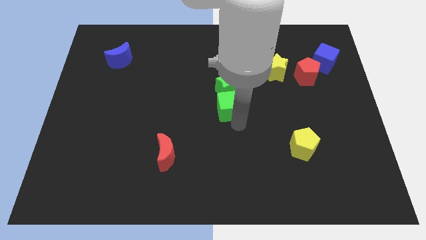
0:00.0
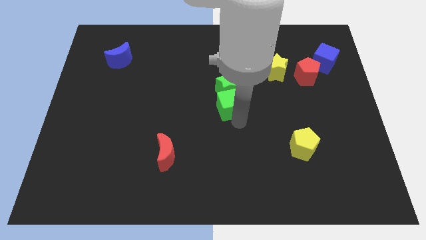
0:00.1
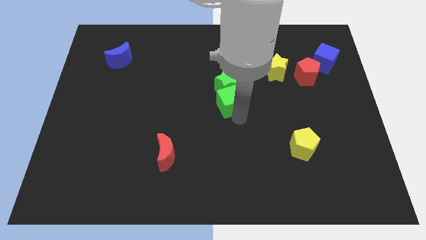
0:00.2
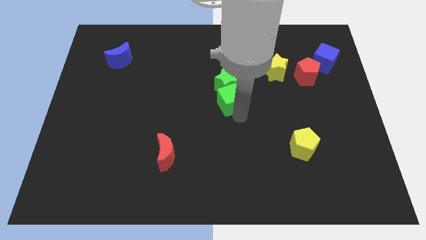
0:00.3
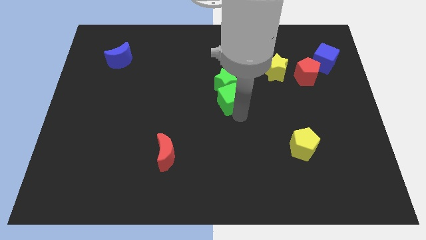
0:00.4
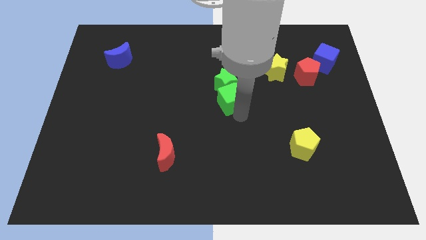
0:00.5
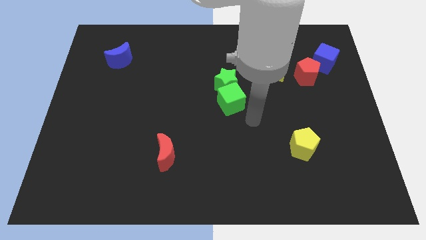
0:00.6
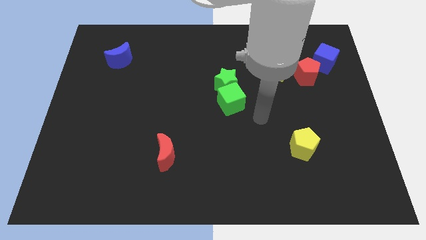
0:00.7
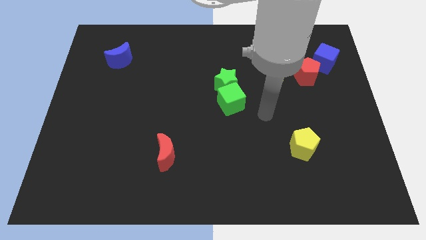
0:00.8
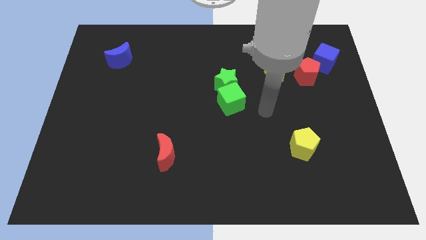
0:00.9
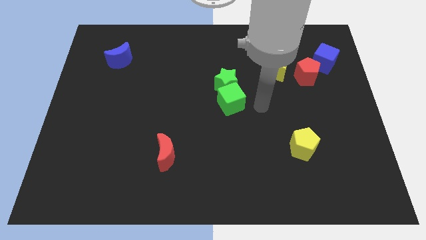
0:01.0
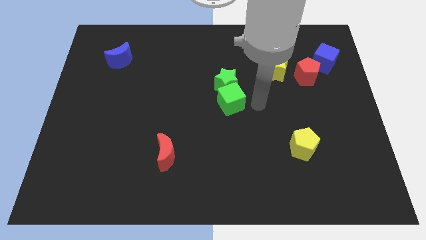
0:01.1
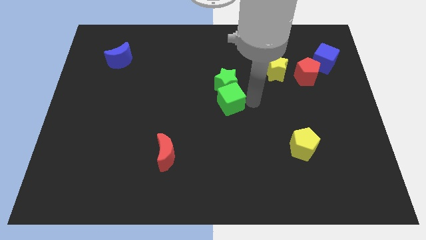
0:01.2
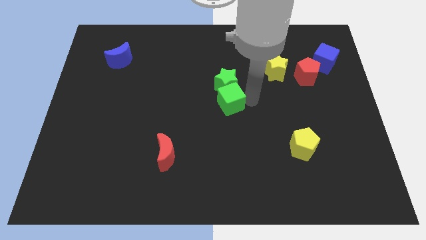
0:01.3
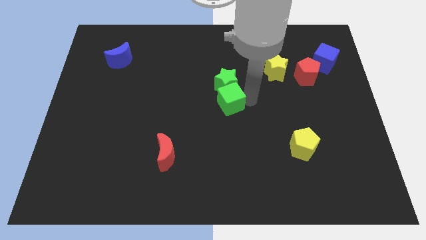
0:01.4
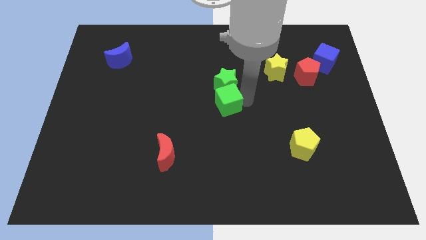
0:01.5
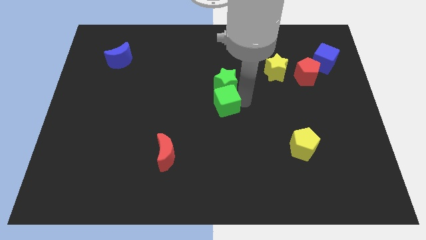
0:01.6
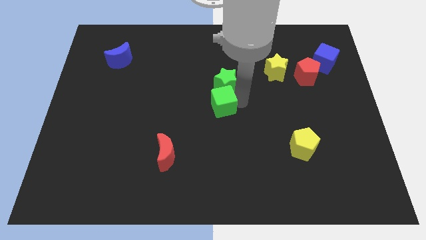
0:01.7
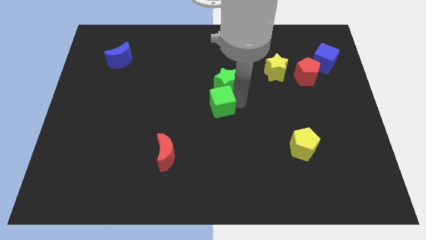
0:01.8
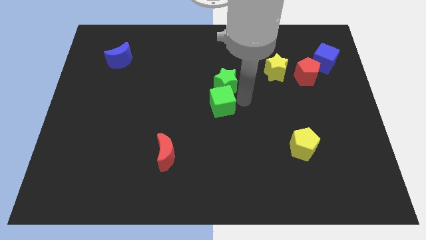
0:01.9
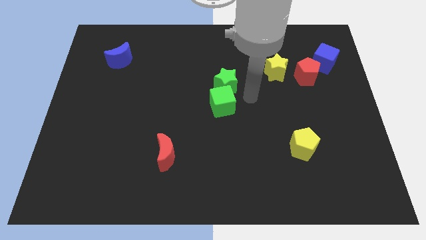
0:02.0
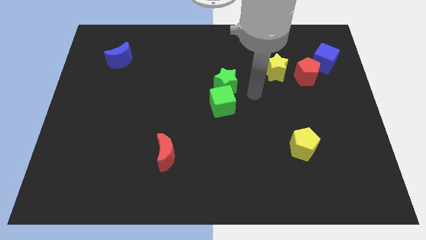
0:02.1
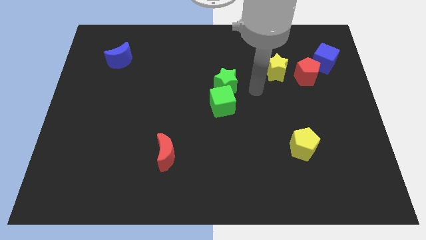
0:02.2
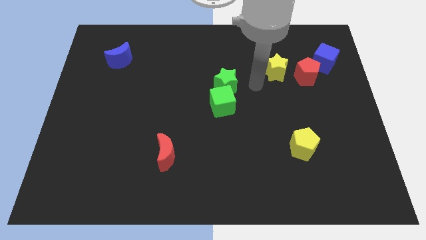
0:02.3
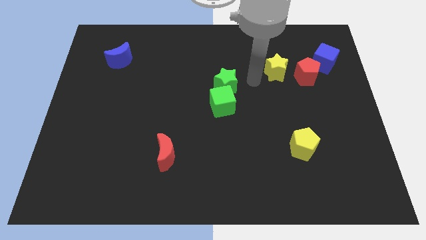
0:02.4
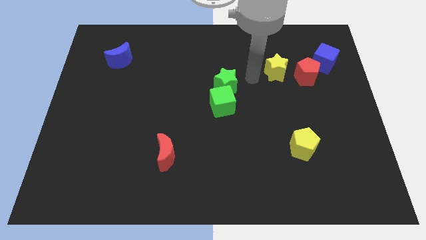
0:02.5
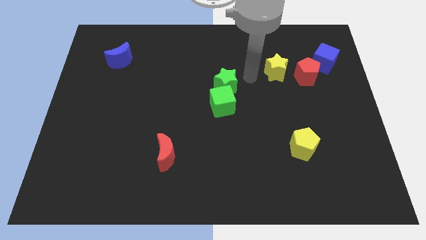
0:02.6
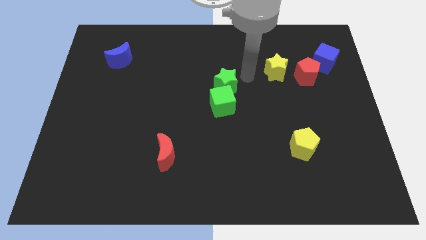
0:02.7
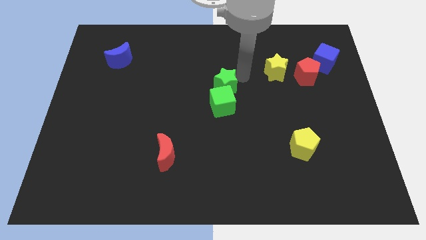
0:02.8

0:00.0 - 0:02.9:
push green cube slightly up

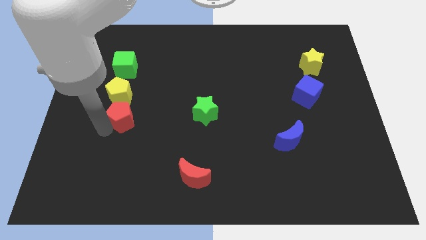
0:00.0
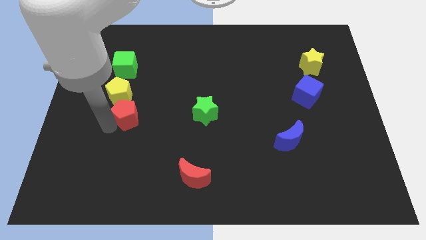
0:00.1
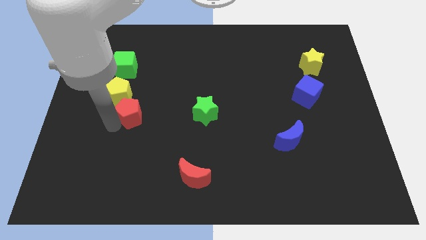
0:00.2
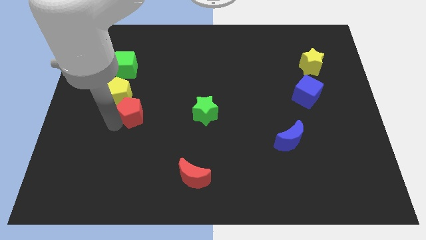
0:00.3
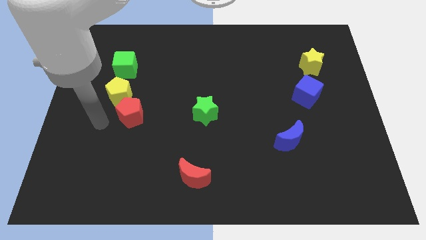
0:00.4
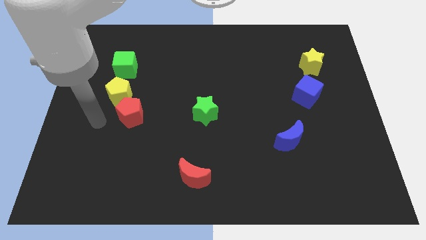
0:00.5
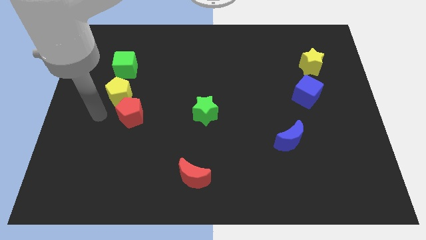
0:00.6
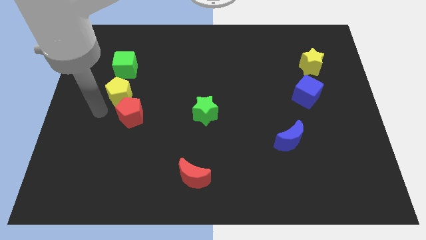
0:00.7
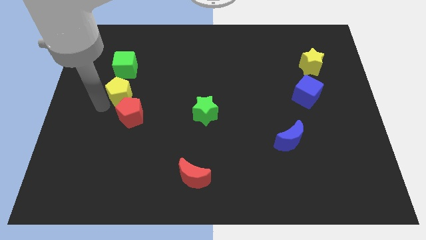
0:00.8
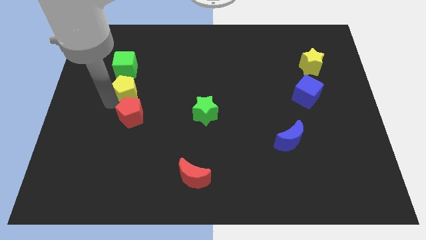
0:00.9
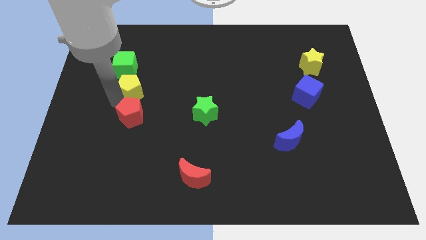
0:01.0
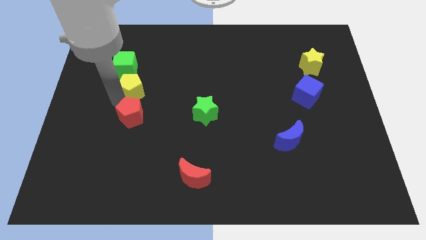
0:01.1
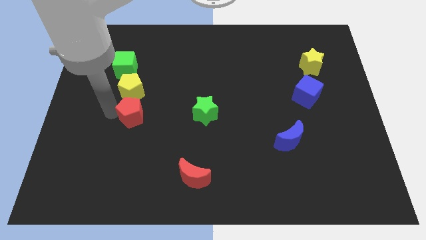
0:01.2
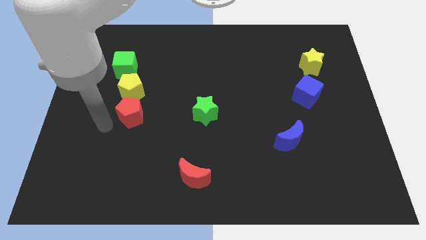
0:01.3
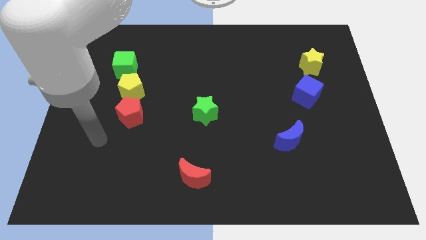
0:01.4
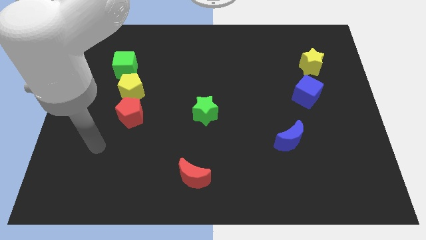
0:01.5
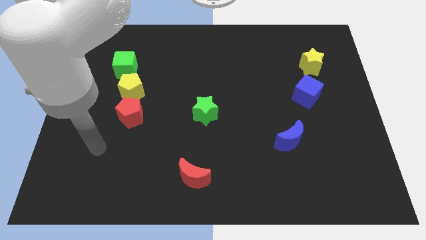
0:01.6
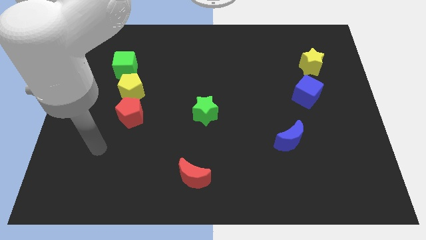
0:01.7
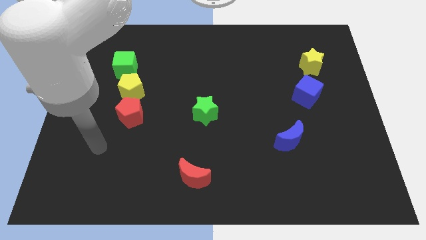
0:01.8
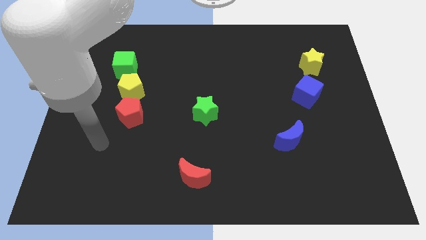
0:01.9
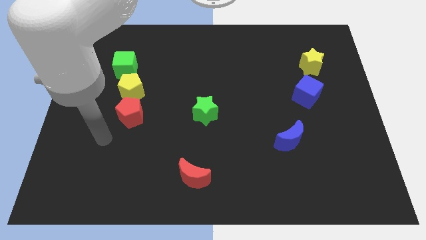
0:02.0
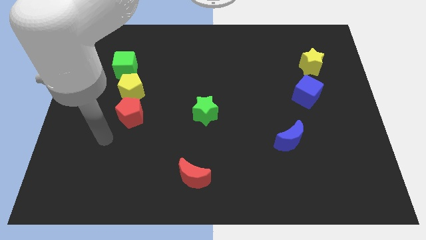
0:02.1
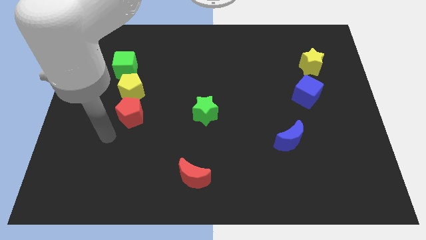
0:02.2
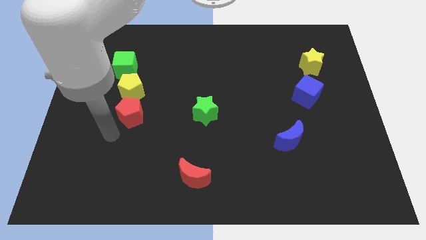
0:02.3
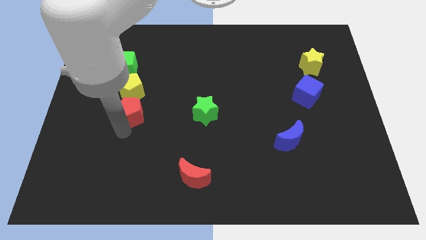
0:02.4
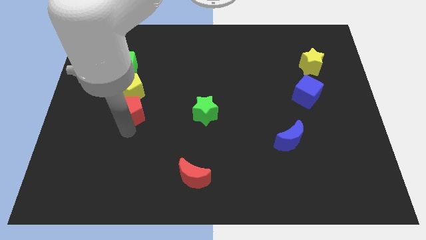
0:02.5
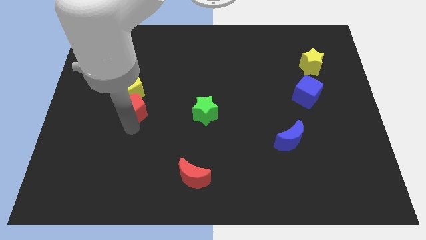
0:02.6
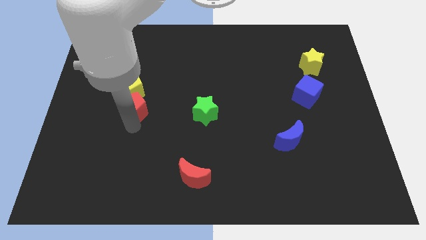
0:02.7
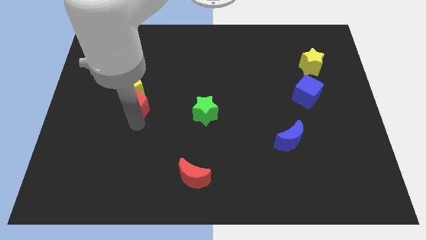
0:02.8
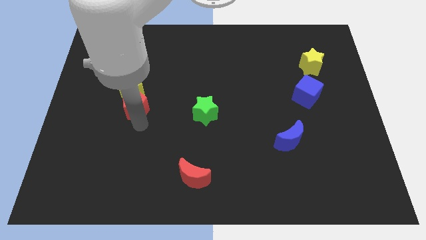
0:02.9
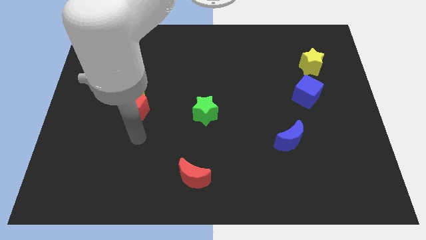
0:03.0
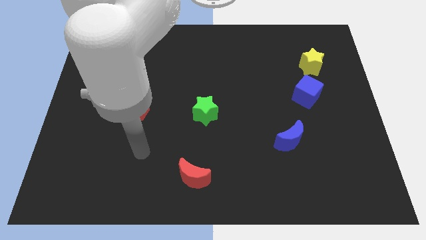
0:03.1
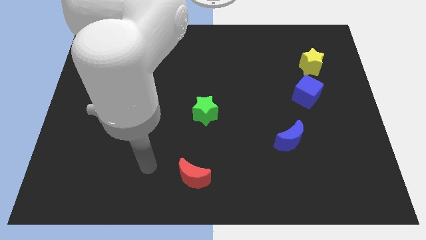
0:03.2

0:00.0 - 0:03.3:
adjust pentagons below the green cube

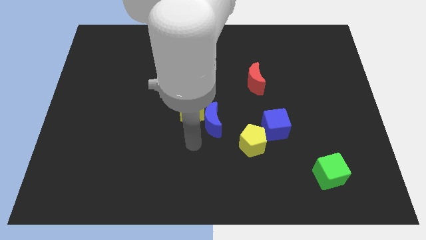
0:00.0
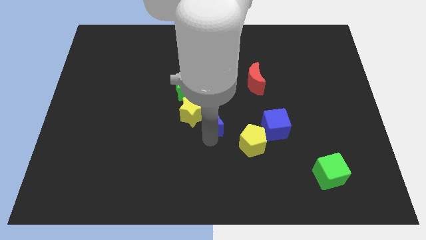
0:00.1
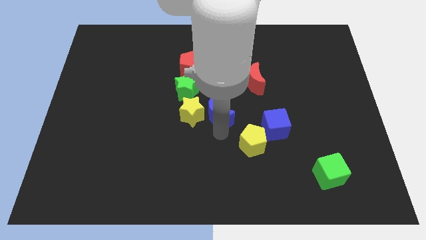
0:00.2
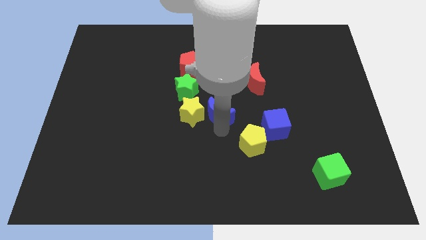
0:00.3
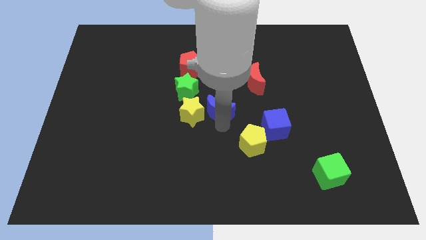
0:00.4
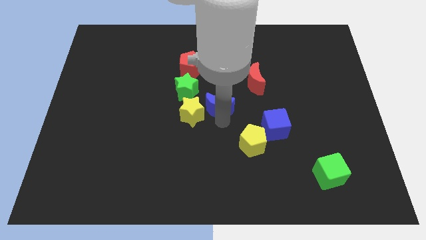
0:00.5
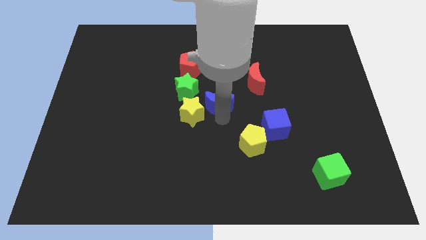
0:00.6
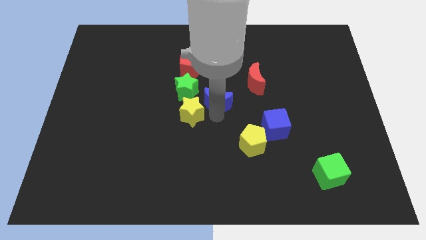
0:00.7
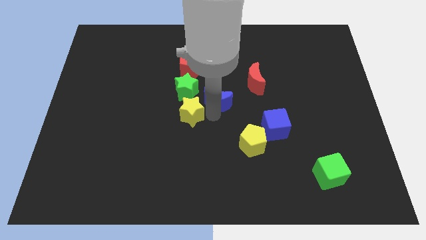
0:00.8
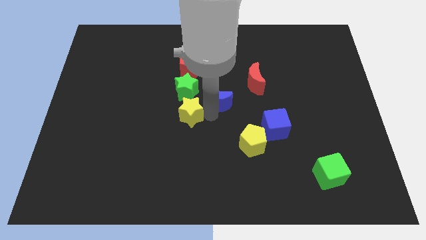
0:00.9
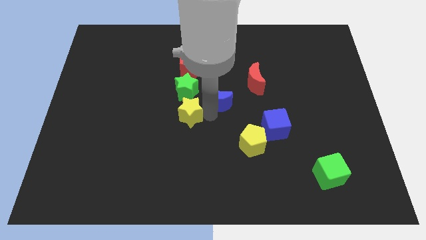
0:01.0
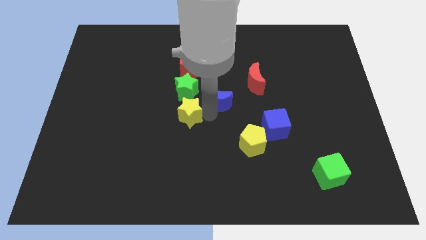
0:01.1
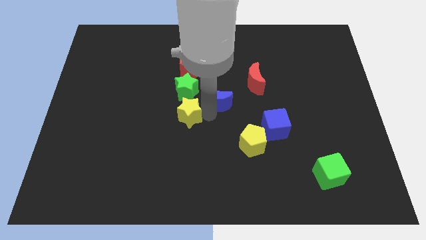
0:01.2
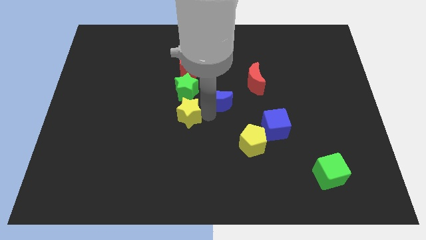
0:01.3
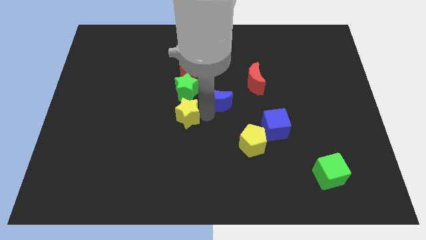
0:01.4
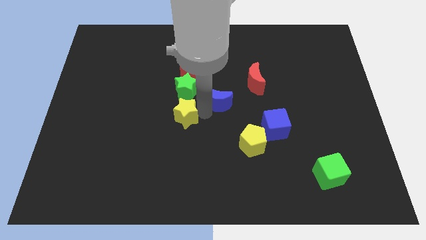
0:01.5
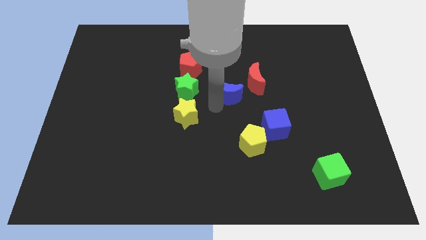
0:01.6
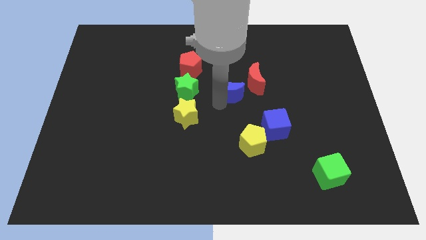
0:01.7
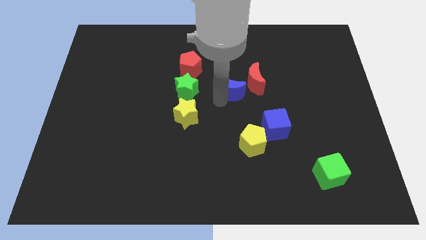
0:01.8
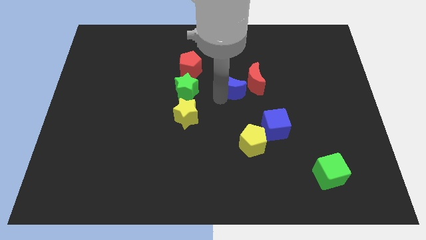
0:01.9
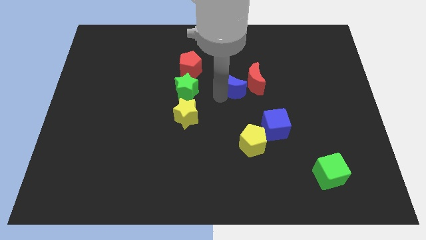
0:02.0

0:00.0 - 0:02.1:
move the blue crescent to the red crescent

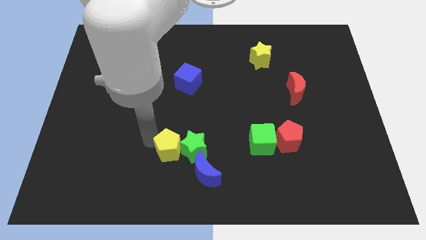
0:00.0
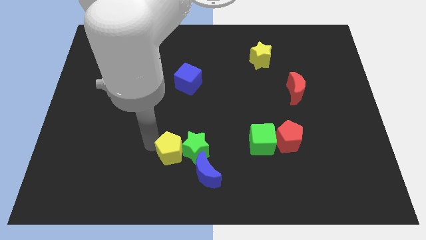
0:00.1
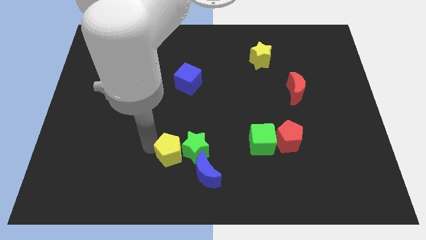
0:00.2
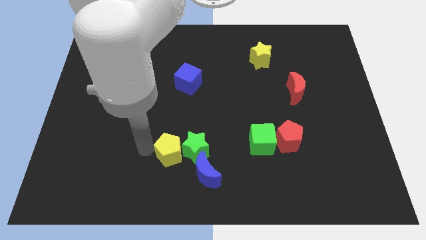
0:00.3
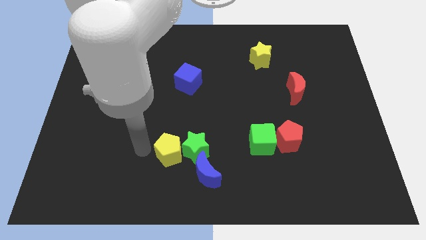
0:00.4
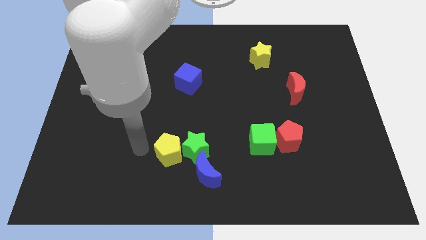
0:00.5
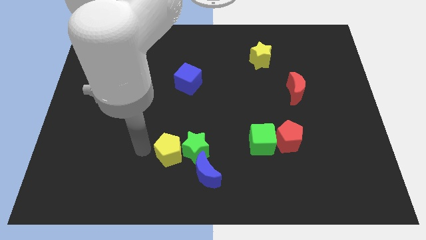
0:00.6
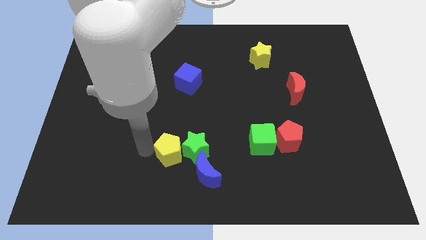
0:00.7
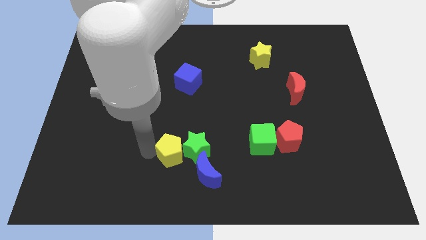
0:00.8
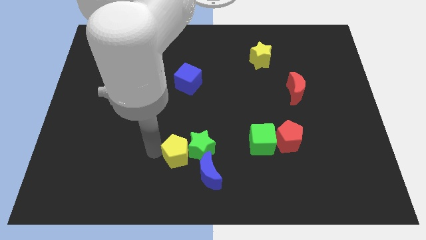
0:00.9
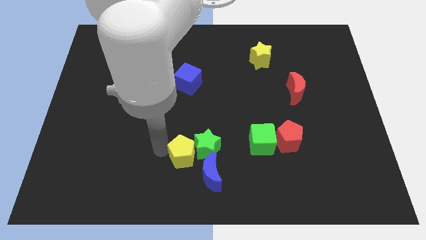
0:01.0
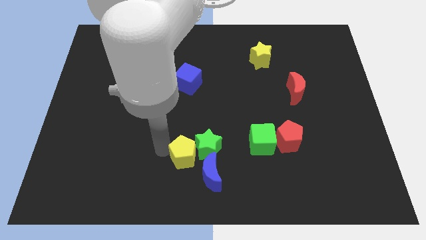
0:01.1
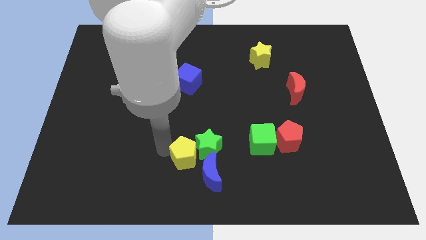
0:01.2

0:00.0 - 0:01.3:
push yellow pentagon in to green star
